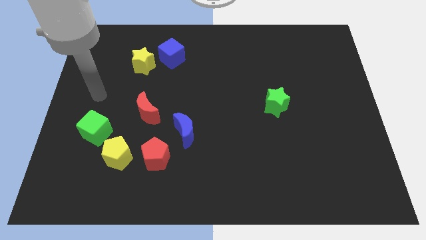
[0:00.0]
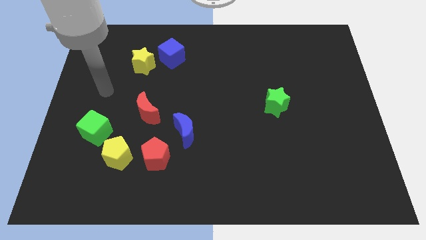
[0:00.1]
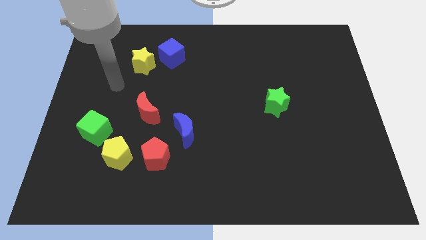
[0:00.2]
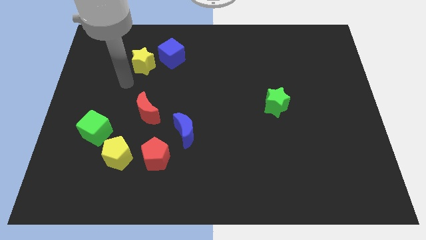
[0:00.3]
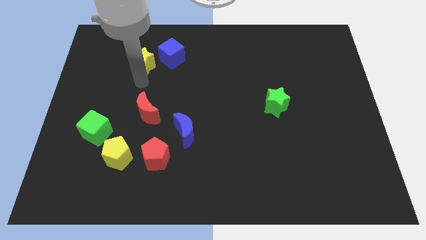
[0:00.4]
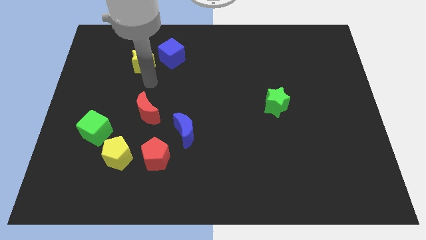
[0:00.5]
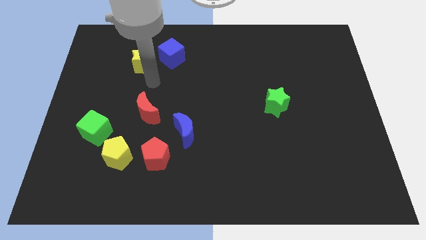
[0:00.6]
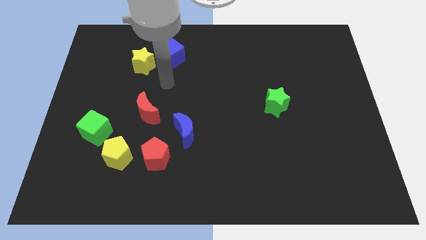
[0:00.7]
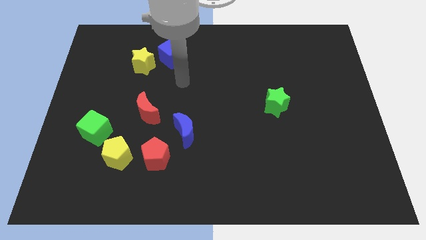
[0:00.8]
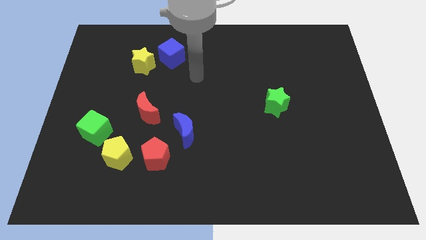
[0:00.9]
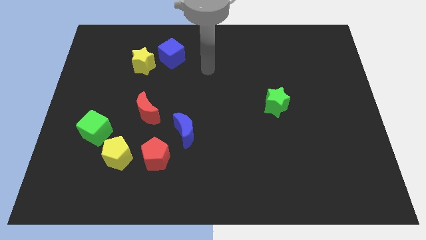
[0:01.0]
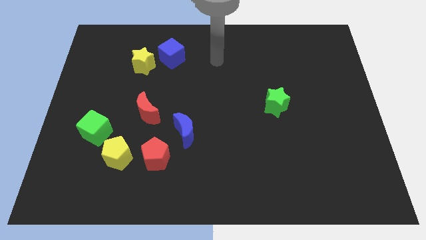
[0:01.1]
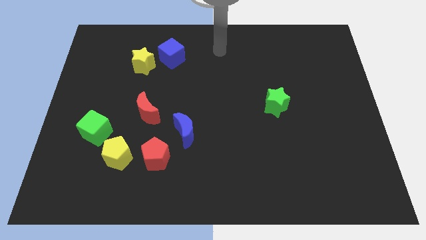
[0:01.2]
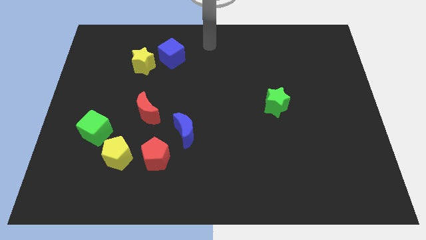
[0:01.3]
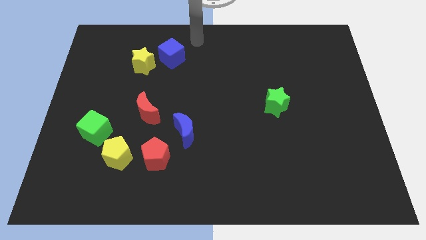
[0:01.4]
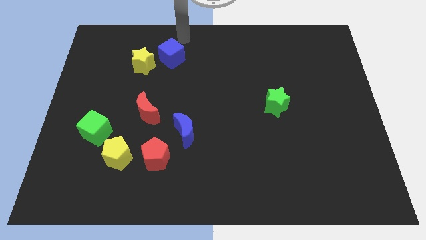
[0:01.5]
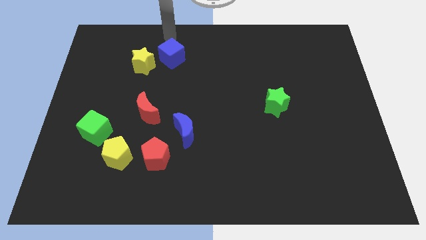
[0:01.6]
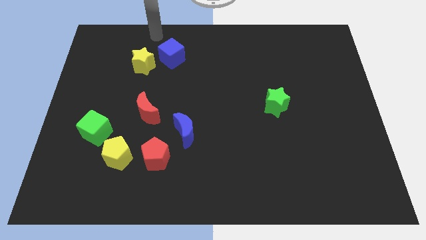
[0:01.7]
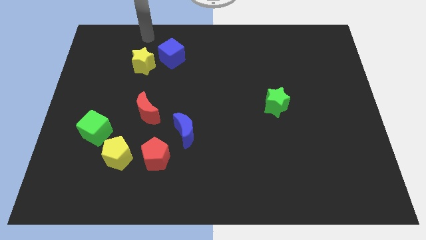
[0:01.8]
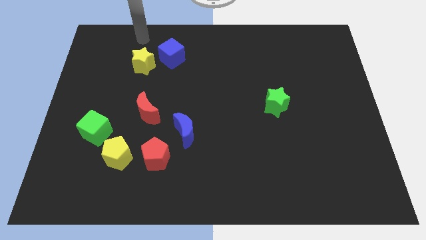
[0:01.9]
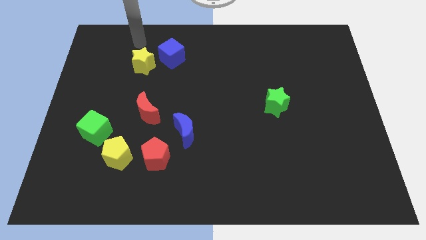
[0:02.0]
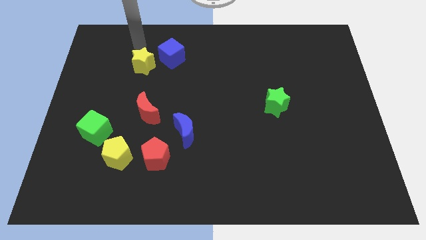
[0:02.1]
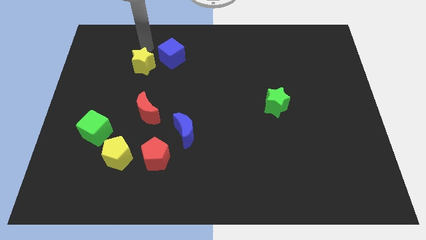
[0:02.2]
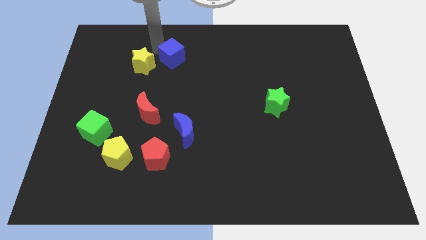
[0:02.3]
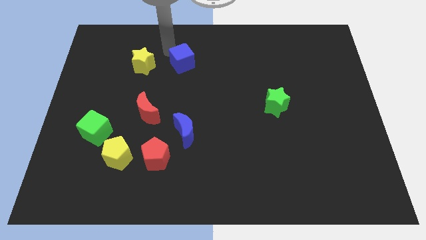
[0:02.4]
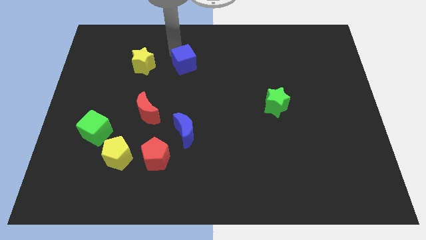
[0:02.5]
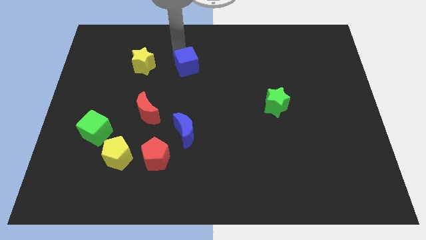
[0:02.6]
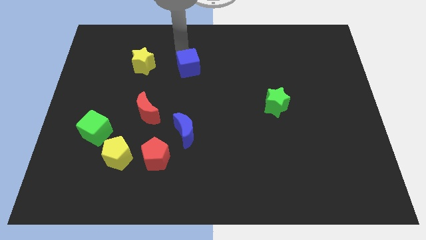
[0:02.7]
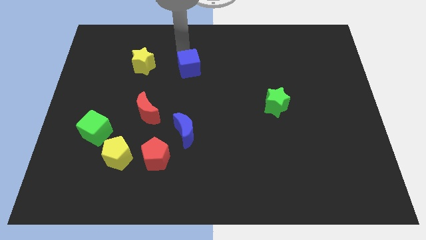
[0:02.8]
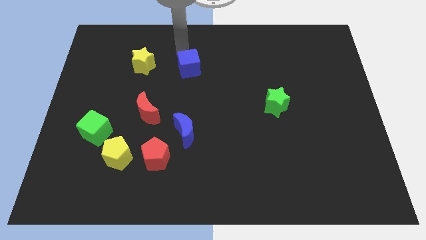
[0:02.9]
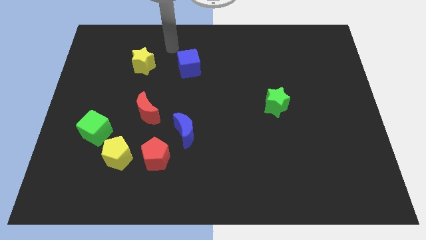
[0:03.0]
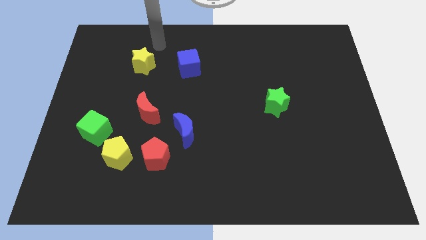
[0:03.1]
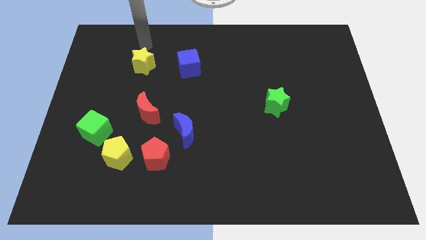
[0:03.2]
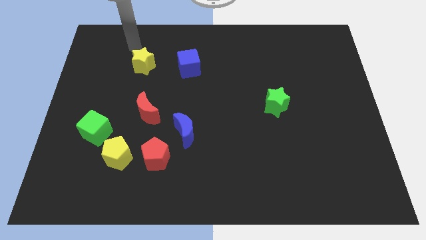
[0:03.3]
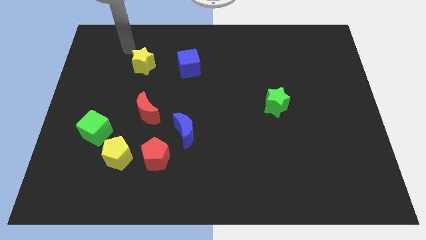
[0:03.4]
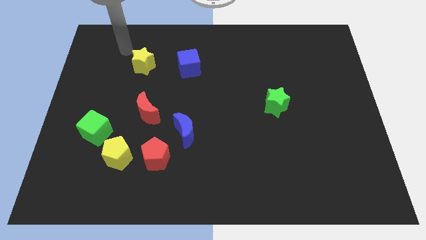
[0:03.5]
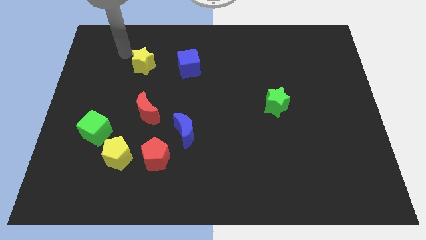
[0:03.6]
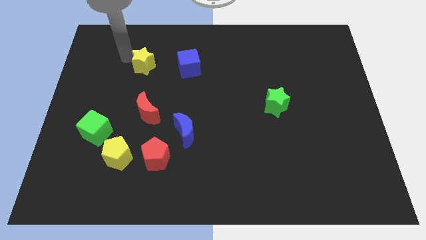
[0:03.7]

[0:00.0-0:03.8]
move the blue cube to the right of the yellow star

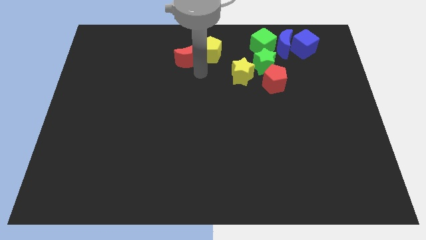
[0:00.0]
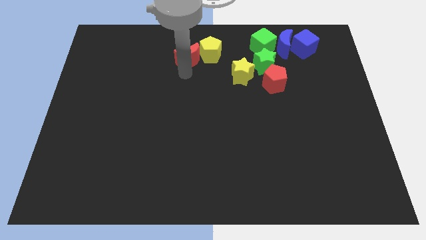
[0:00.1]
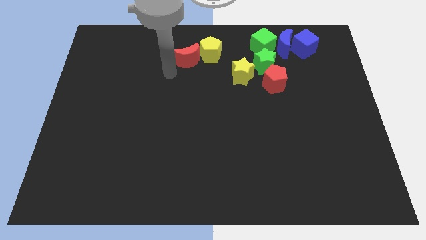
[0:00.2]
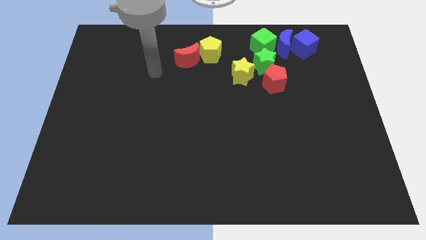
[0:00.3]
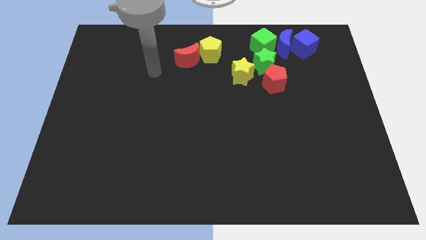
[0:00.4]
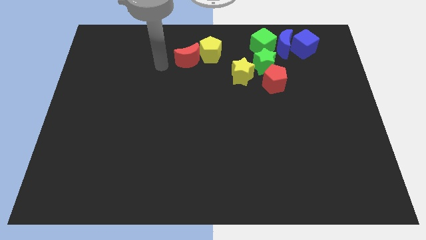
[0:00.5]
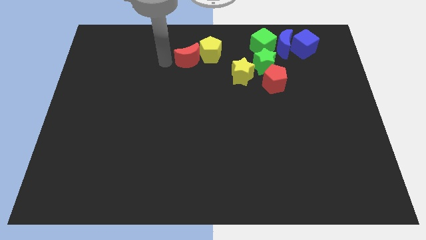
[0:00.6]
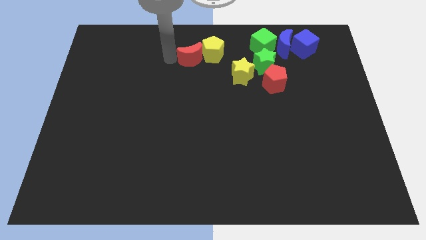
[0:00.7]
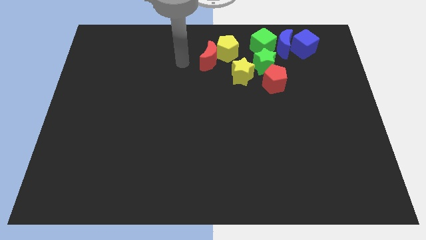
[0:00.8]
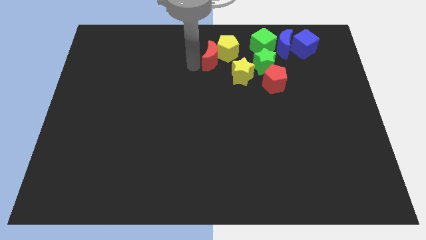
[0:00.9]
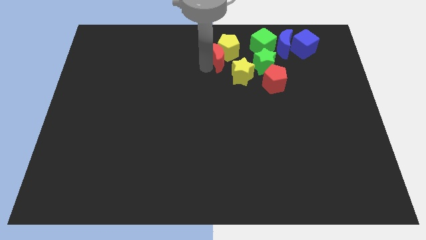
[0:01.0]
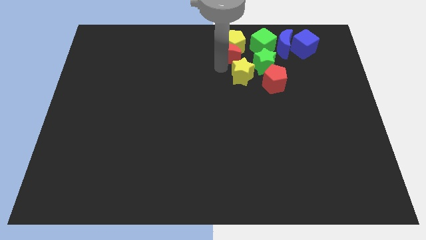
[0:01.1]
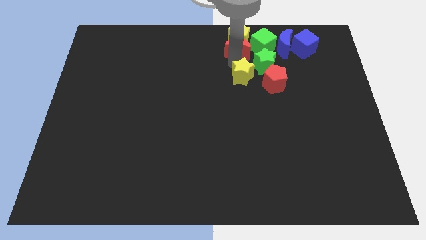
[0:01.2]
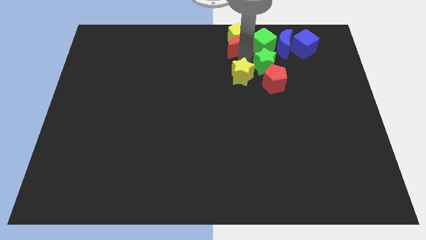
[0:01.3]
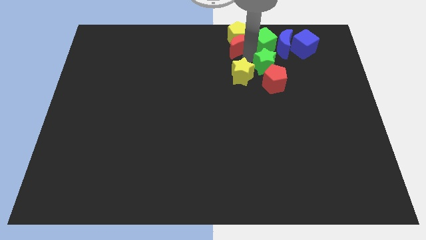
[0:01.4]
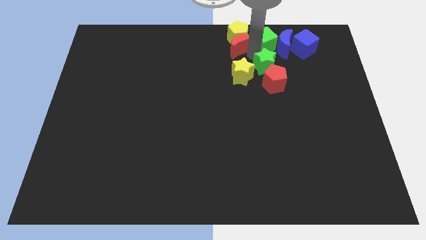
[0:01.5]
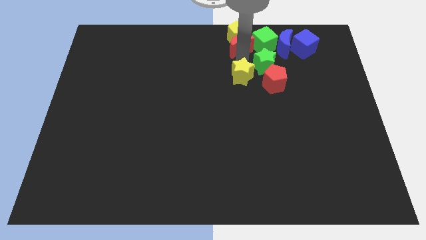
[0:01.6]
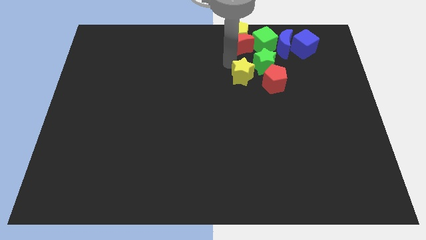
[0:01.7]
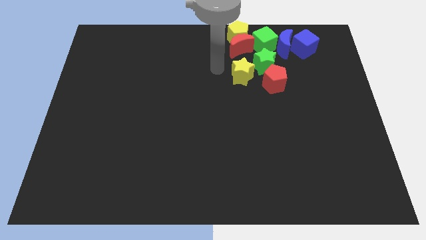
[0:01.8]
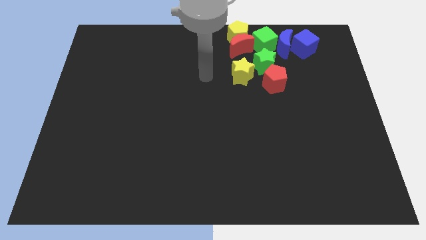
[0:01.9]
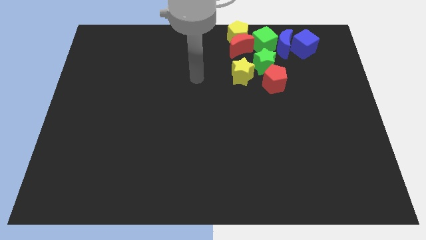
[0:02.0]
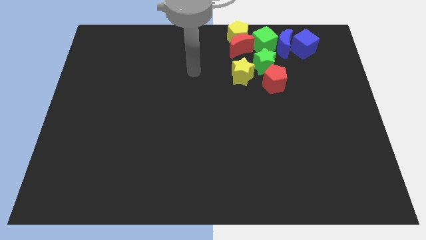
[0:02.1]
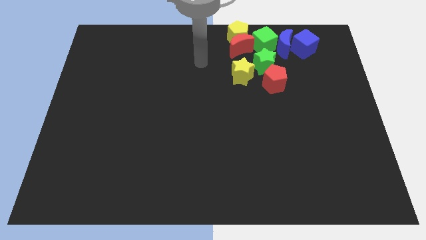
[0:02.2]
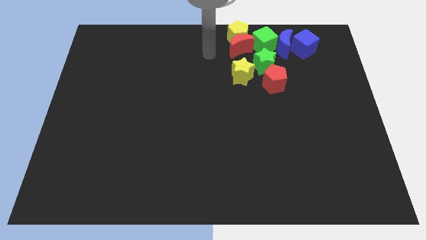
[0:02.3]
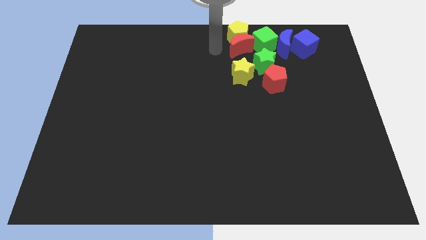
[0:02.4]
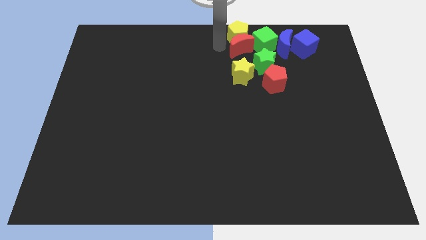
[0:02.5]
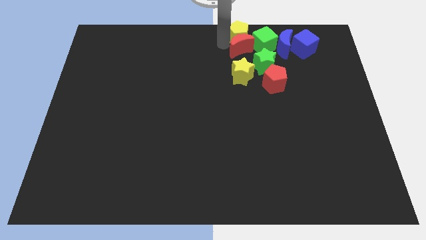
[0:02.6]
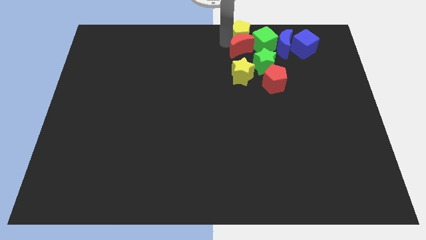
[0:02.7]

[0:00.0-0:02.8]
move the red crescent and the yellow pentagon to the top center

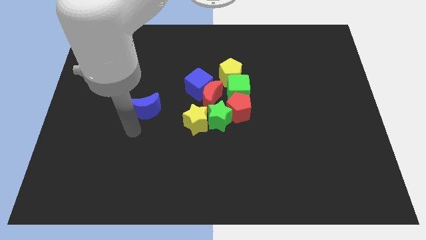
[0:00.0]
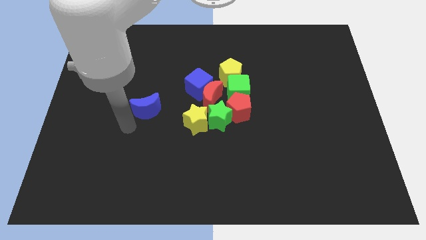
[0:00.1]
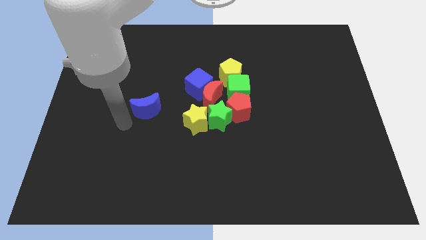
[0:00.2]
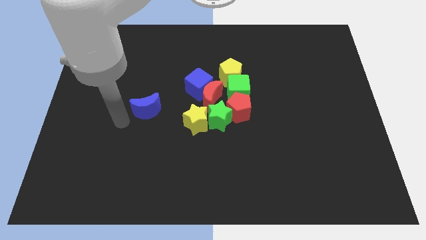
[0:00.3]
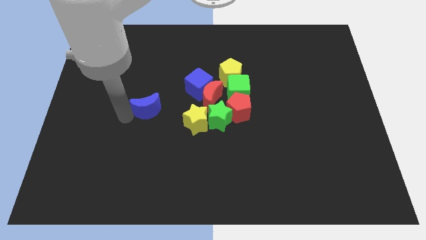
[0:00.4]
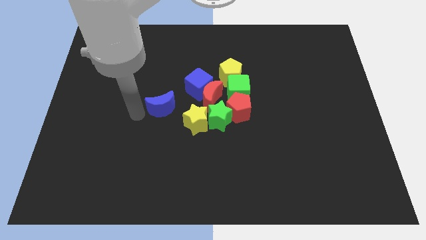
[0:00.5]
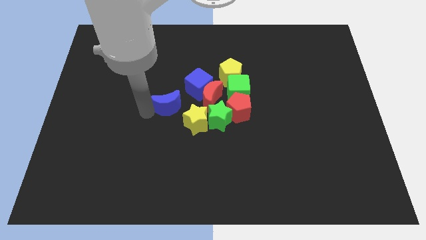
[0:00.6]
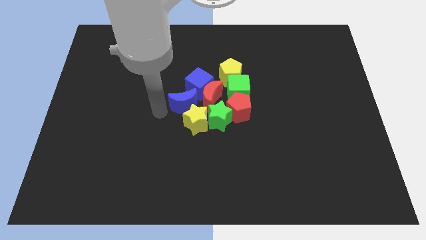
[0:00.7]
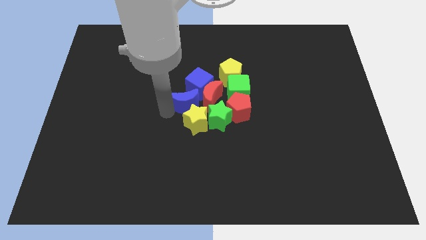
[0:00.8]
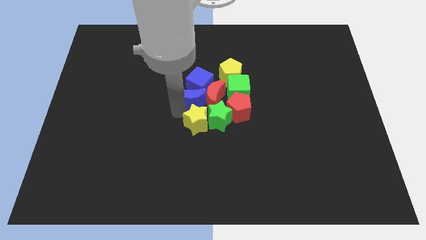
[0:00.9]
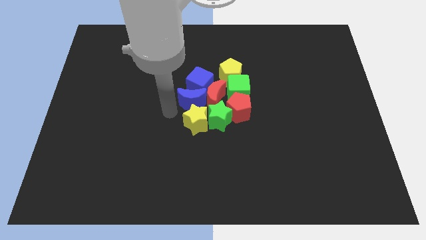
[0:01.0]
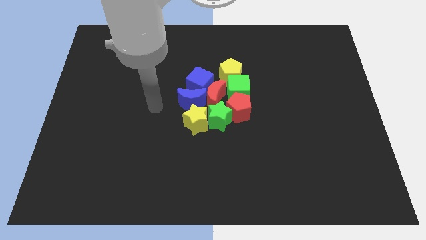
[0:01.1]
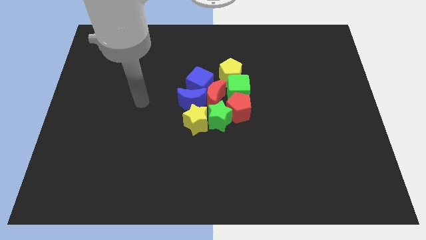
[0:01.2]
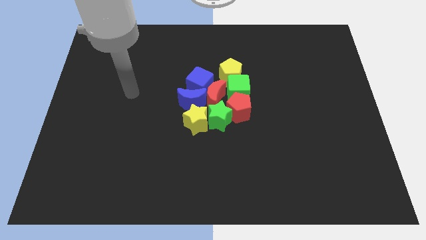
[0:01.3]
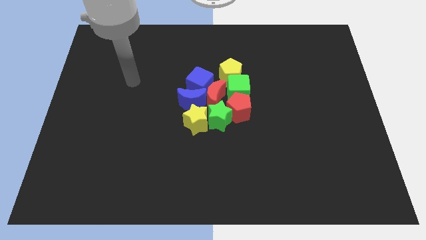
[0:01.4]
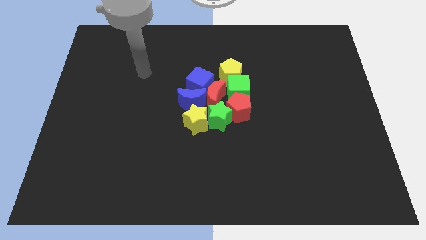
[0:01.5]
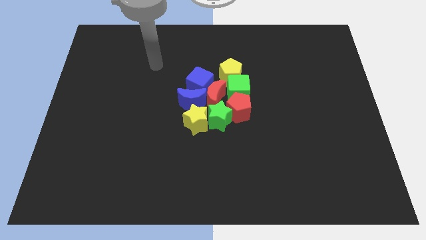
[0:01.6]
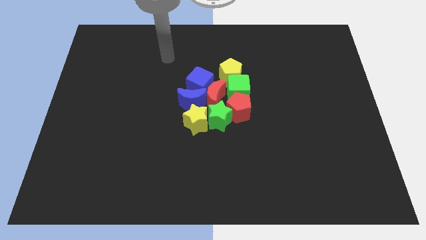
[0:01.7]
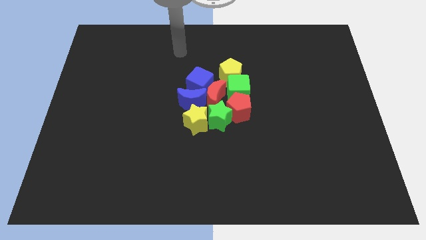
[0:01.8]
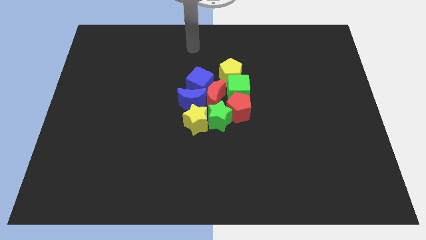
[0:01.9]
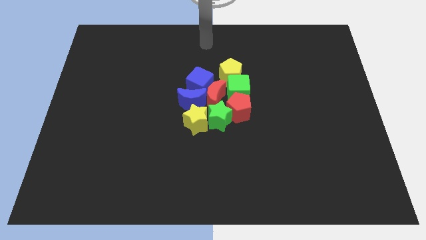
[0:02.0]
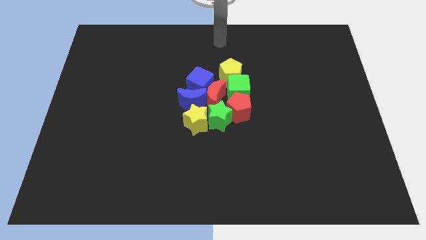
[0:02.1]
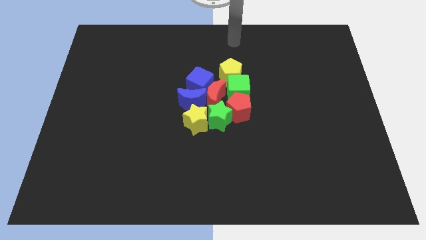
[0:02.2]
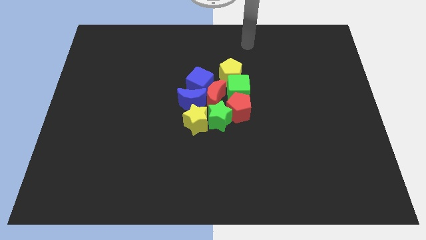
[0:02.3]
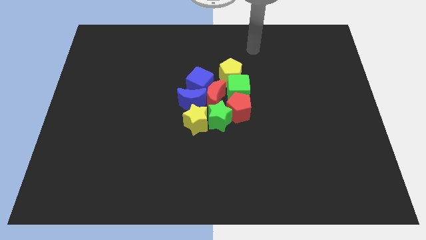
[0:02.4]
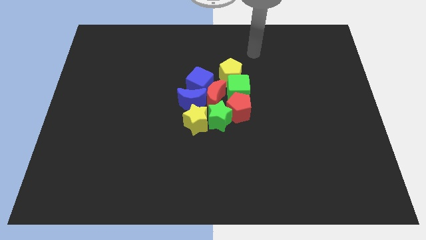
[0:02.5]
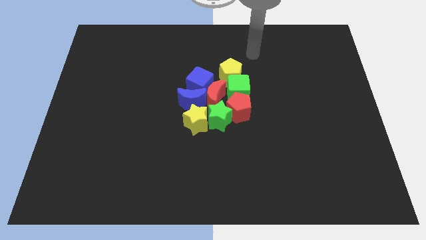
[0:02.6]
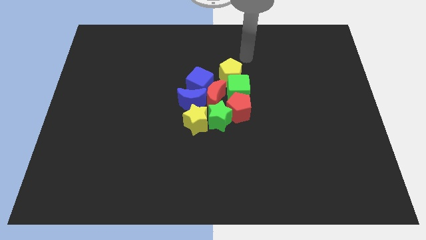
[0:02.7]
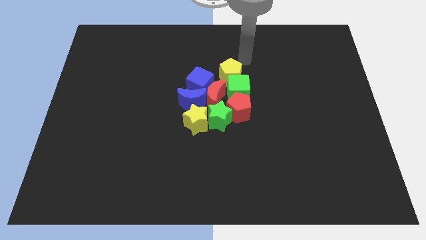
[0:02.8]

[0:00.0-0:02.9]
push the blue crescent to the center of the board
